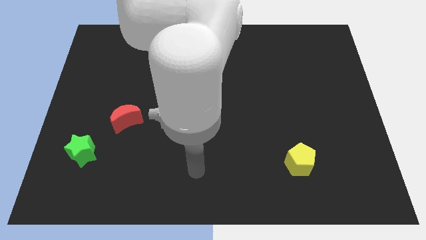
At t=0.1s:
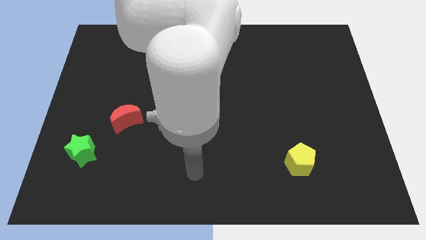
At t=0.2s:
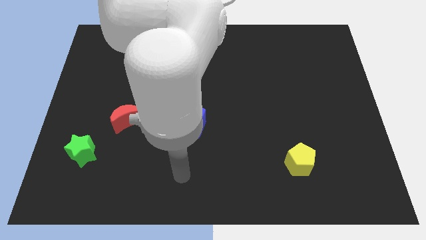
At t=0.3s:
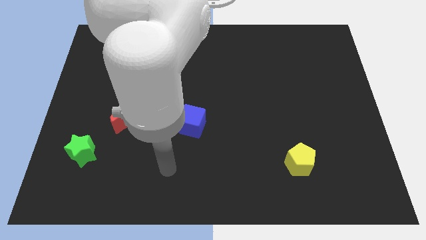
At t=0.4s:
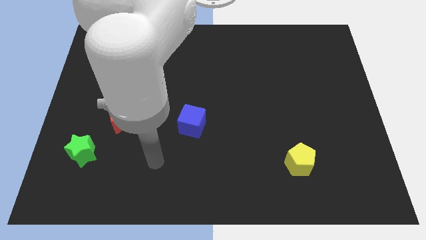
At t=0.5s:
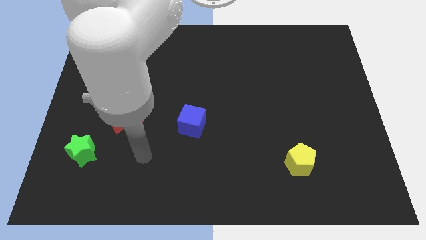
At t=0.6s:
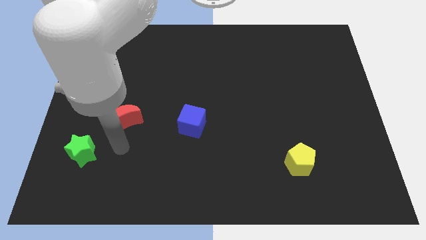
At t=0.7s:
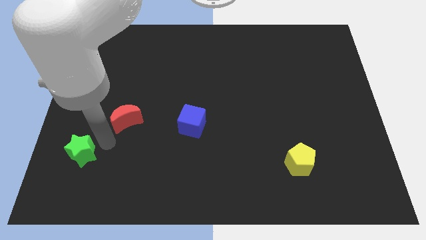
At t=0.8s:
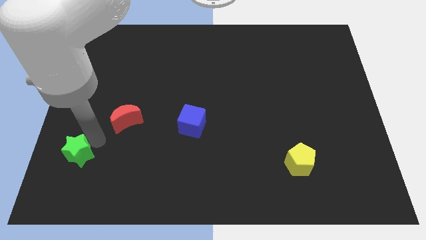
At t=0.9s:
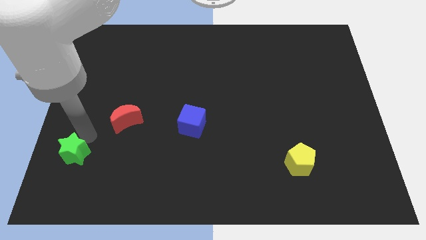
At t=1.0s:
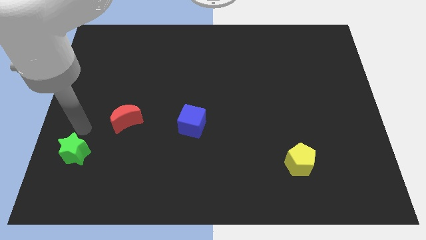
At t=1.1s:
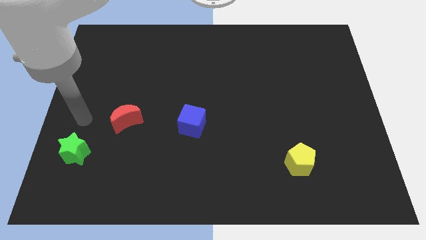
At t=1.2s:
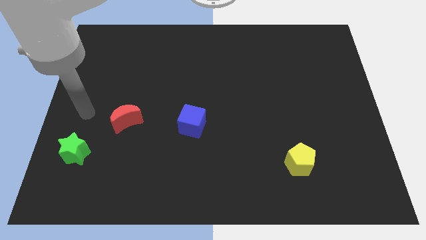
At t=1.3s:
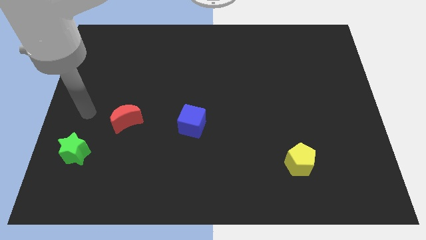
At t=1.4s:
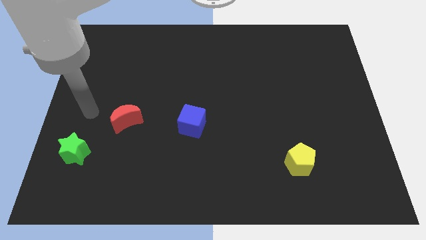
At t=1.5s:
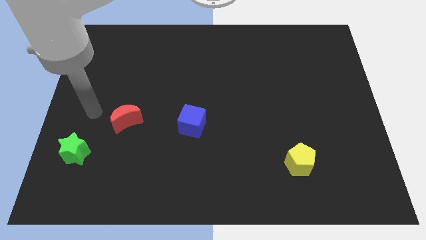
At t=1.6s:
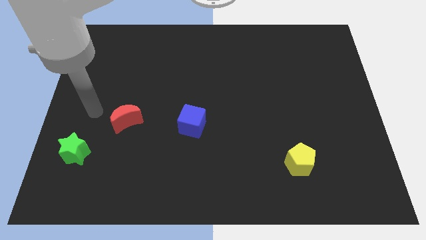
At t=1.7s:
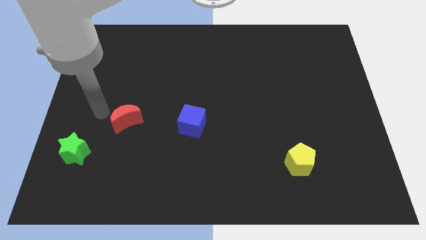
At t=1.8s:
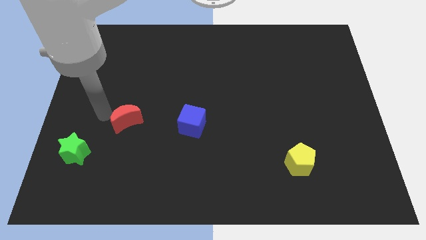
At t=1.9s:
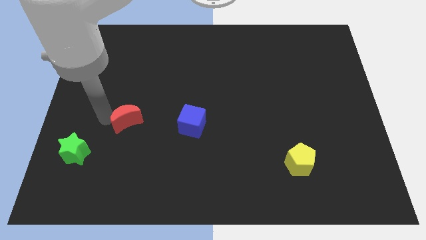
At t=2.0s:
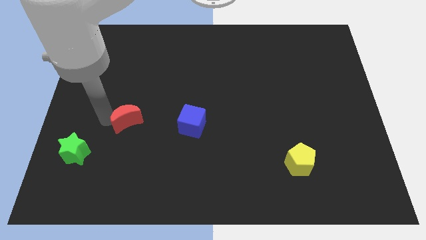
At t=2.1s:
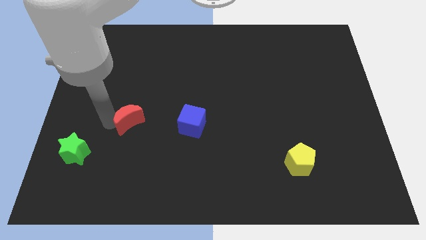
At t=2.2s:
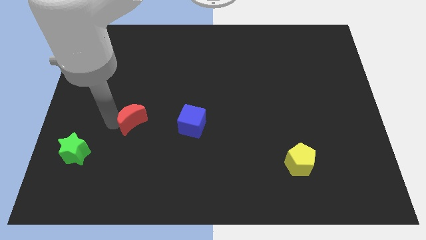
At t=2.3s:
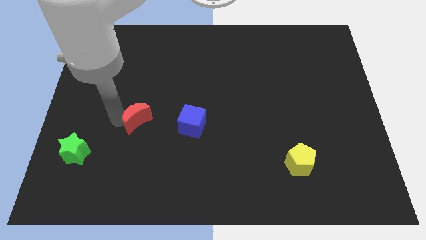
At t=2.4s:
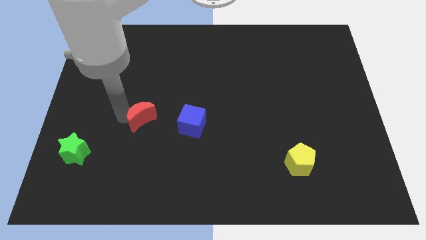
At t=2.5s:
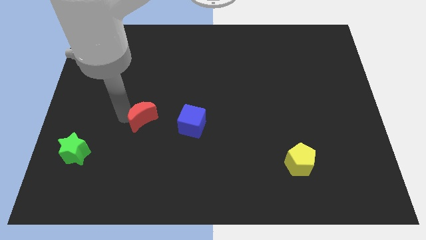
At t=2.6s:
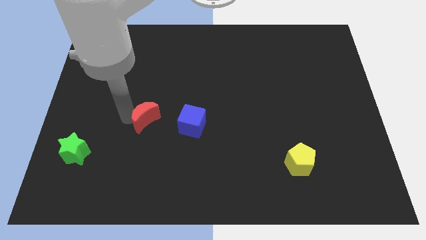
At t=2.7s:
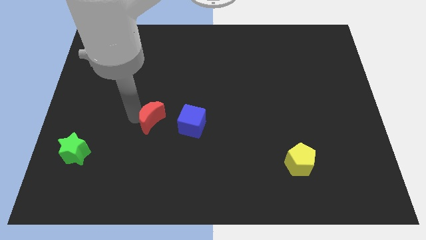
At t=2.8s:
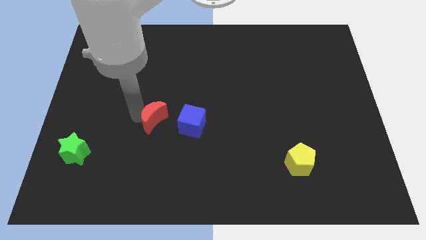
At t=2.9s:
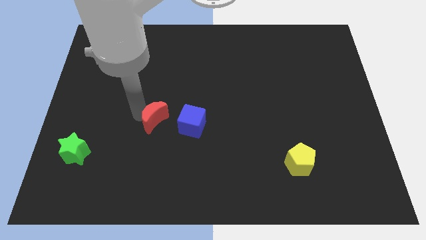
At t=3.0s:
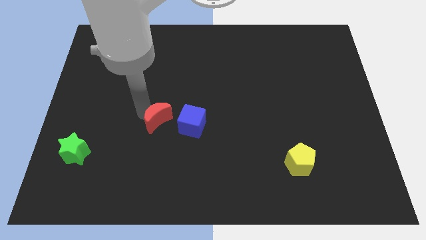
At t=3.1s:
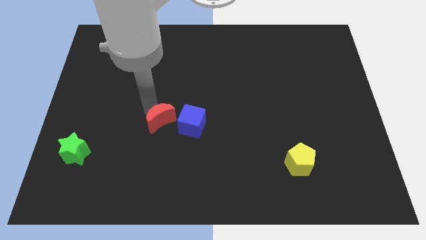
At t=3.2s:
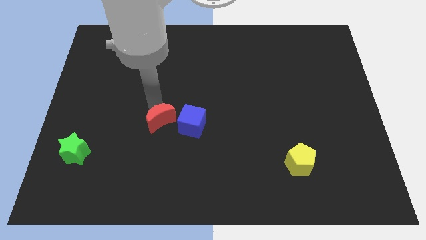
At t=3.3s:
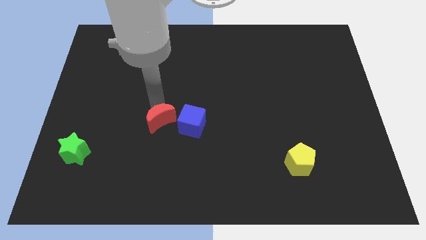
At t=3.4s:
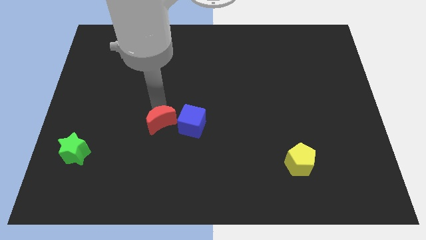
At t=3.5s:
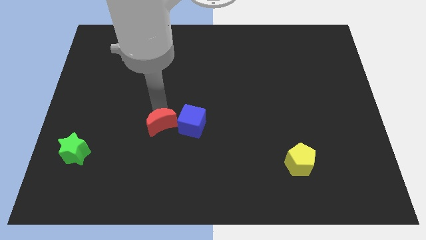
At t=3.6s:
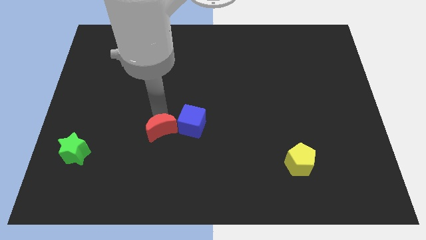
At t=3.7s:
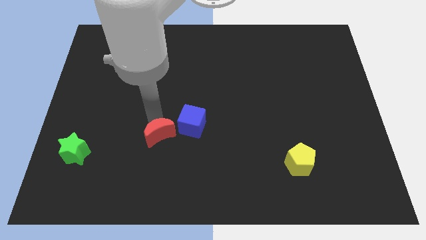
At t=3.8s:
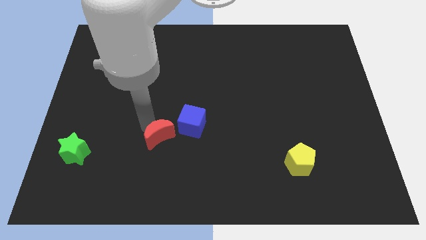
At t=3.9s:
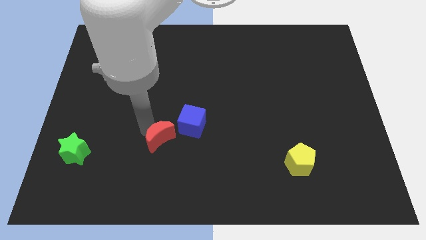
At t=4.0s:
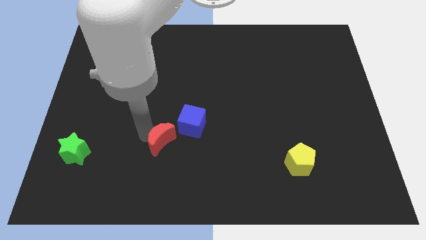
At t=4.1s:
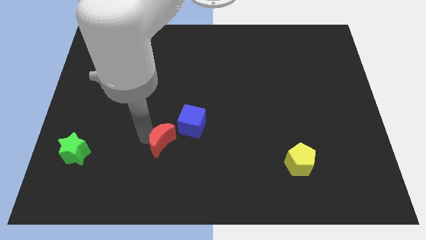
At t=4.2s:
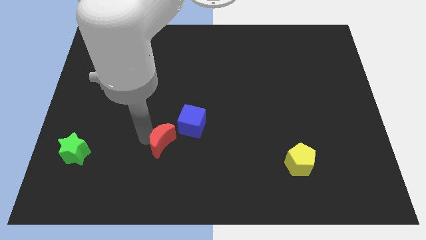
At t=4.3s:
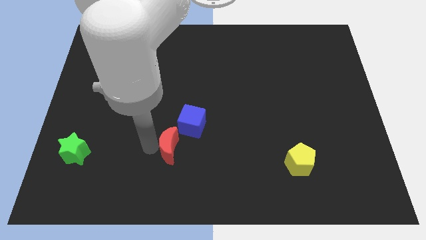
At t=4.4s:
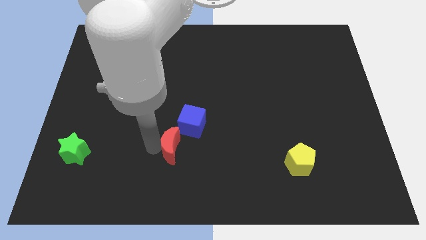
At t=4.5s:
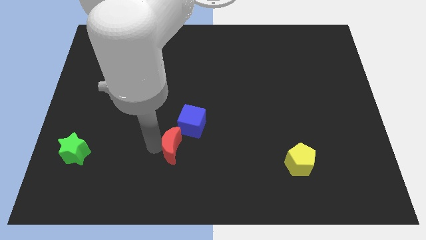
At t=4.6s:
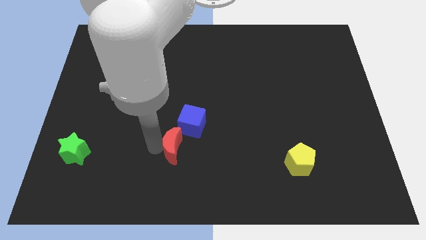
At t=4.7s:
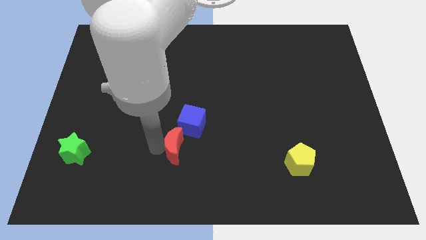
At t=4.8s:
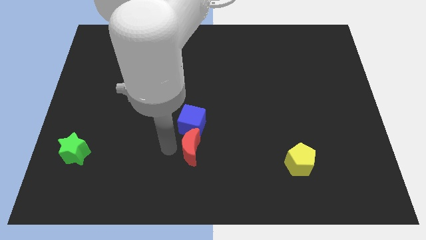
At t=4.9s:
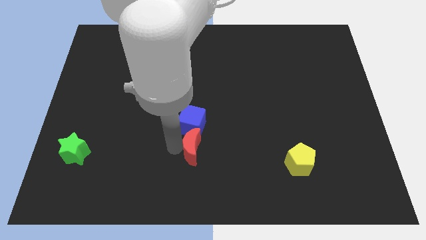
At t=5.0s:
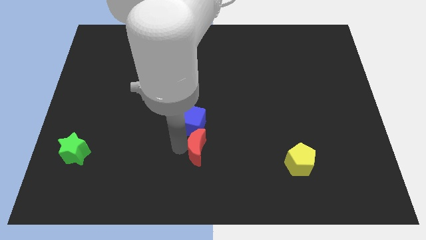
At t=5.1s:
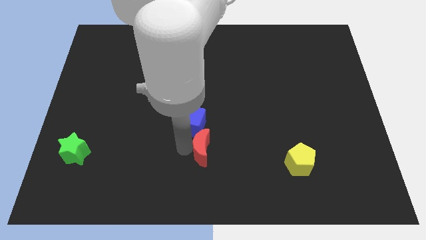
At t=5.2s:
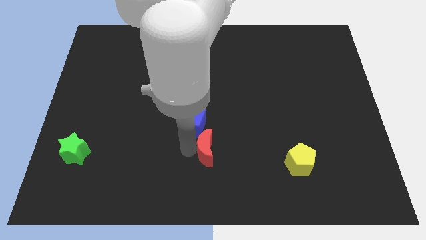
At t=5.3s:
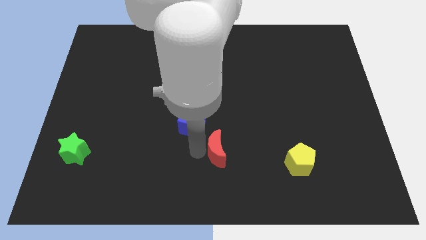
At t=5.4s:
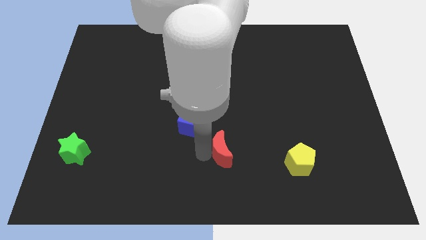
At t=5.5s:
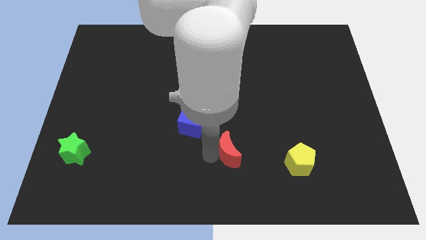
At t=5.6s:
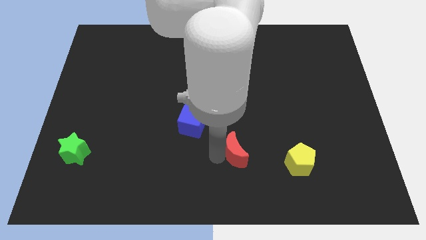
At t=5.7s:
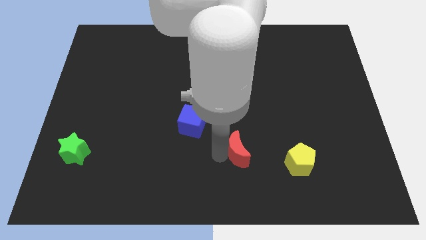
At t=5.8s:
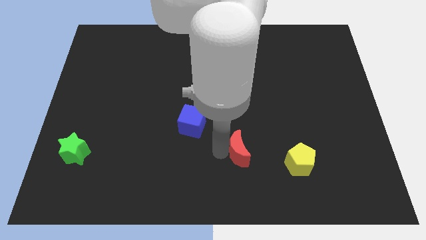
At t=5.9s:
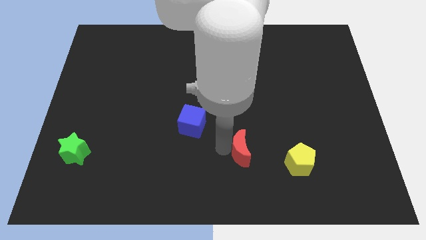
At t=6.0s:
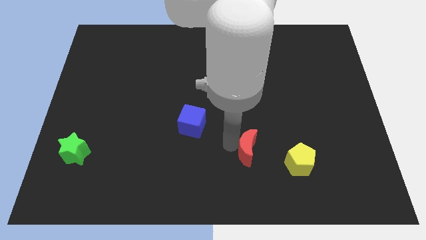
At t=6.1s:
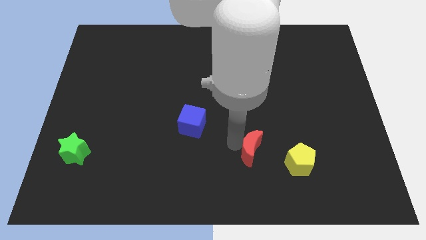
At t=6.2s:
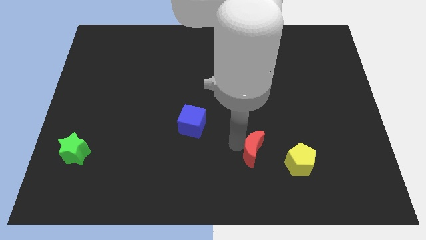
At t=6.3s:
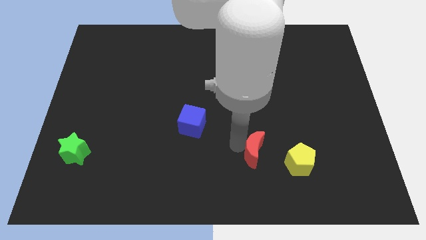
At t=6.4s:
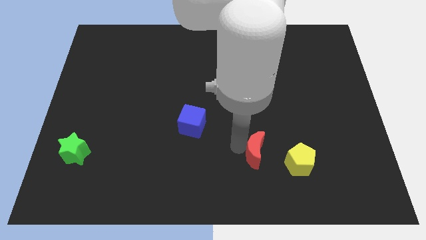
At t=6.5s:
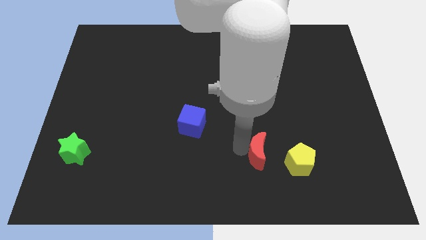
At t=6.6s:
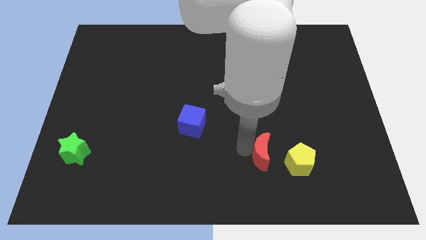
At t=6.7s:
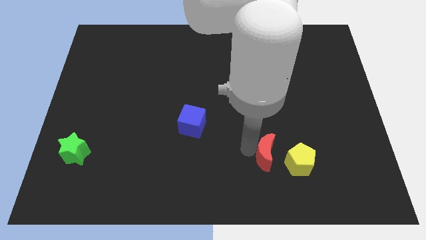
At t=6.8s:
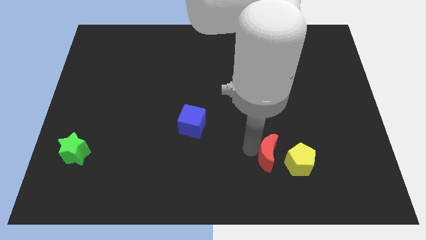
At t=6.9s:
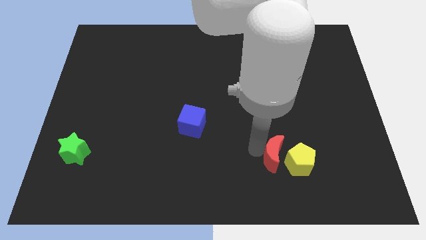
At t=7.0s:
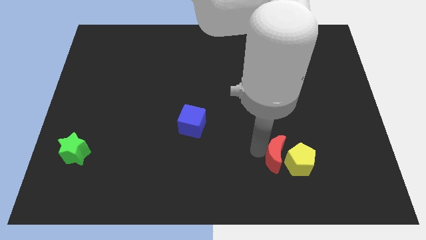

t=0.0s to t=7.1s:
slide the moon next to the pentagon

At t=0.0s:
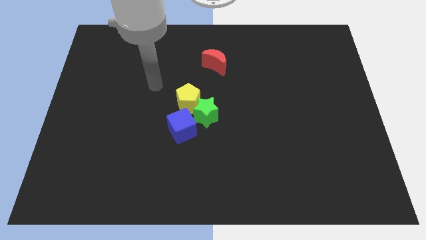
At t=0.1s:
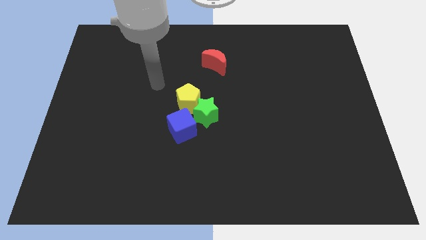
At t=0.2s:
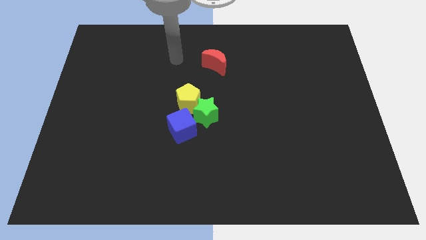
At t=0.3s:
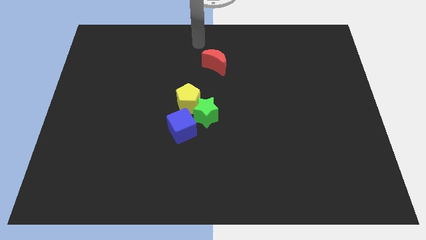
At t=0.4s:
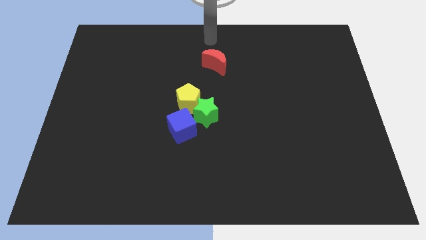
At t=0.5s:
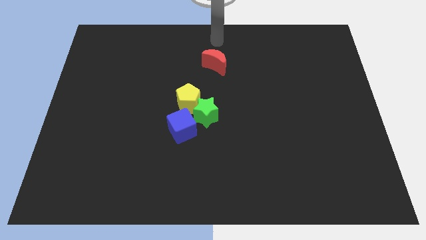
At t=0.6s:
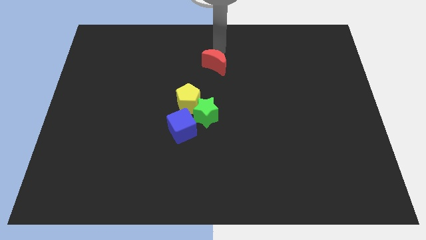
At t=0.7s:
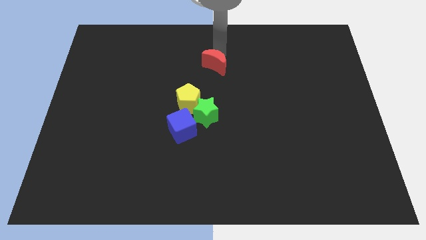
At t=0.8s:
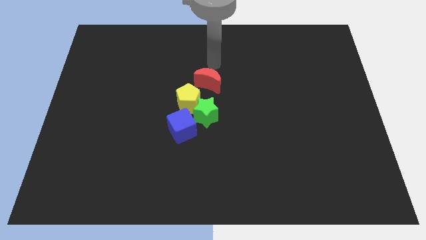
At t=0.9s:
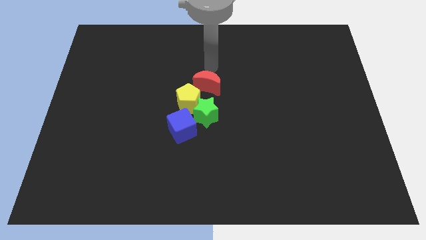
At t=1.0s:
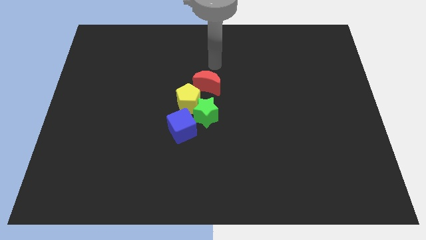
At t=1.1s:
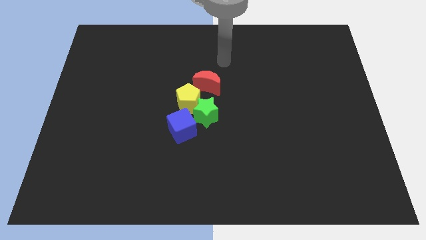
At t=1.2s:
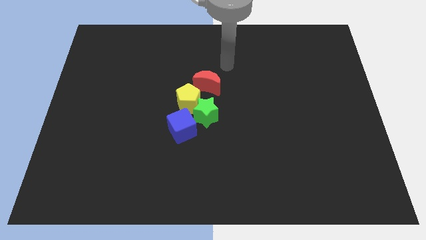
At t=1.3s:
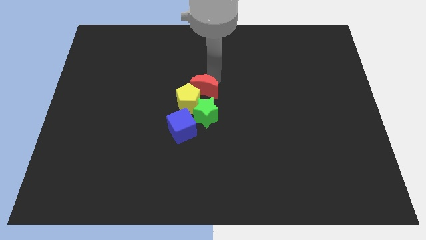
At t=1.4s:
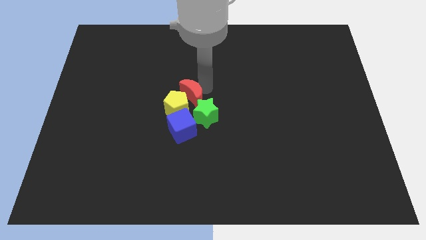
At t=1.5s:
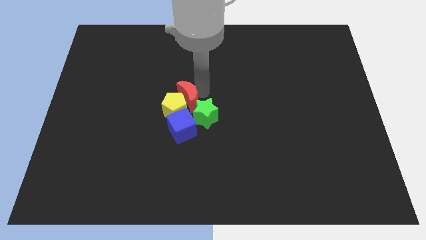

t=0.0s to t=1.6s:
slide the moon towards the yellow pentagon

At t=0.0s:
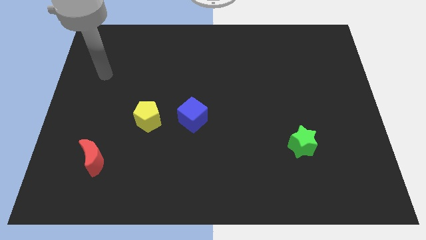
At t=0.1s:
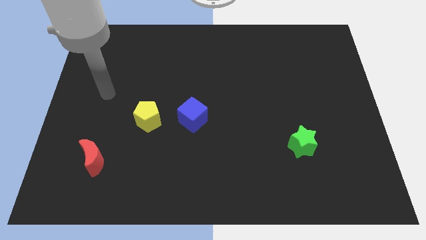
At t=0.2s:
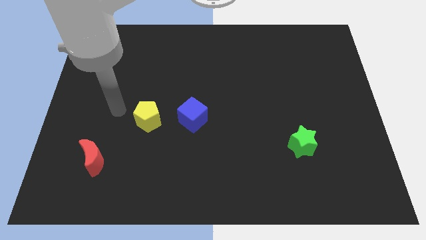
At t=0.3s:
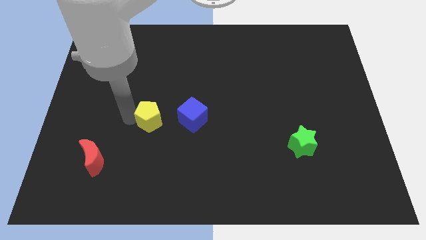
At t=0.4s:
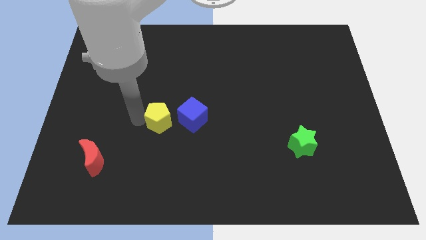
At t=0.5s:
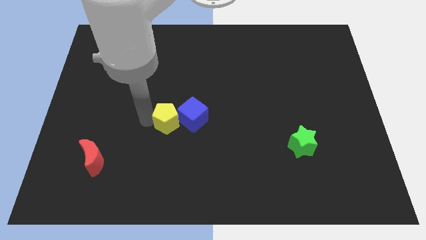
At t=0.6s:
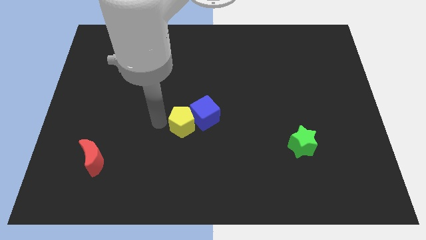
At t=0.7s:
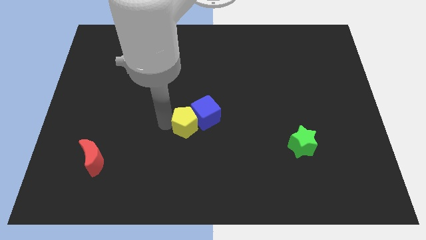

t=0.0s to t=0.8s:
push the yellow pentagon close to the blue block
